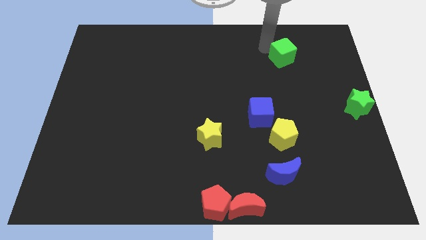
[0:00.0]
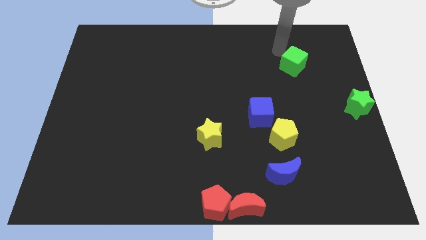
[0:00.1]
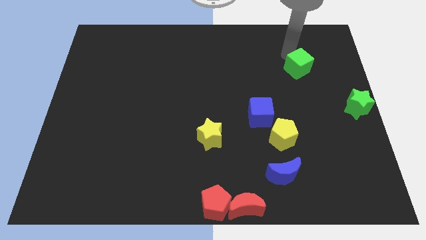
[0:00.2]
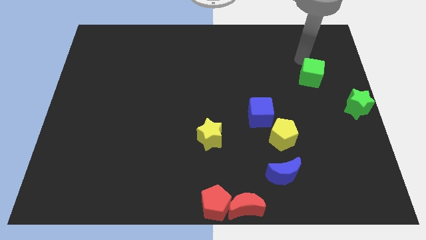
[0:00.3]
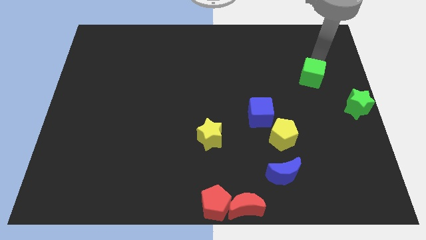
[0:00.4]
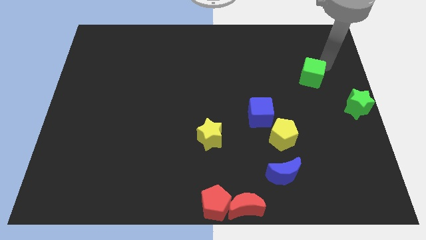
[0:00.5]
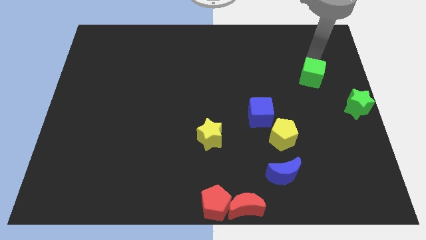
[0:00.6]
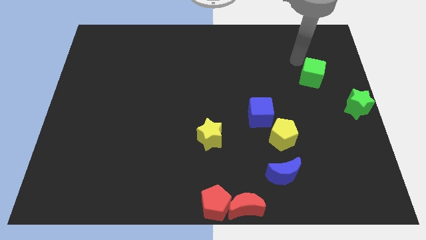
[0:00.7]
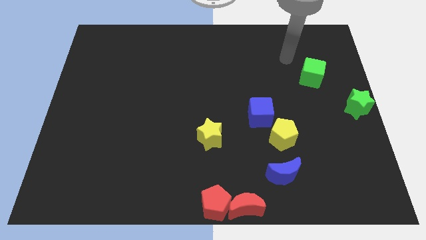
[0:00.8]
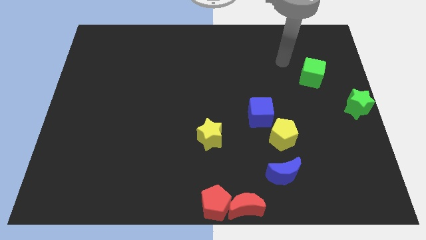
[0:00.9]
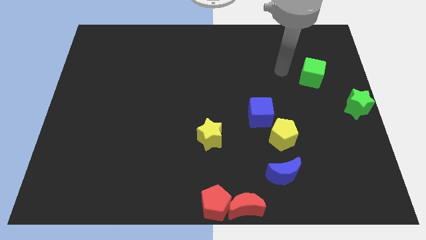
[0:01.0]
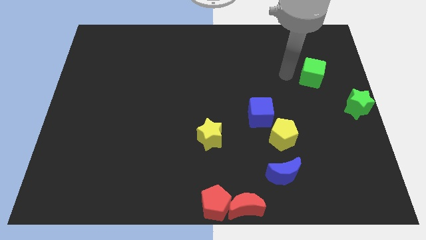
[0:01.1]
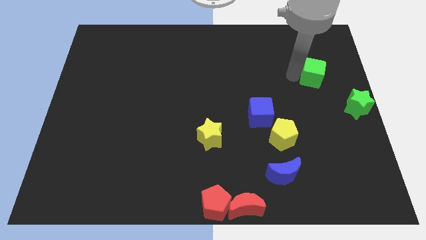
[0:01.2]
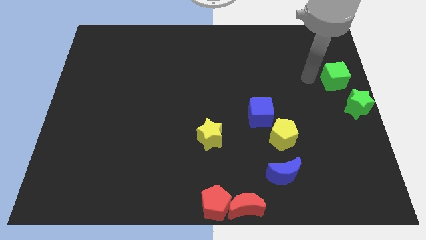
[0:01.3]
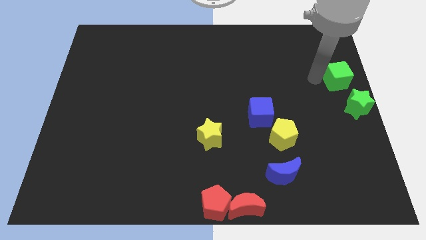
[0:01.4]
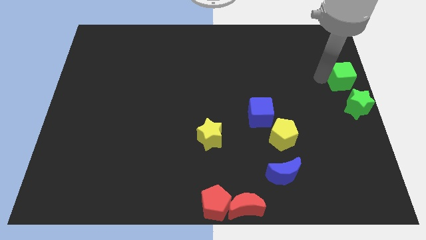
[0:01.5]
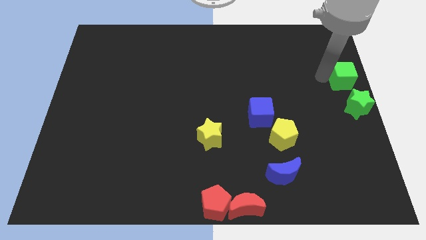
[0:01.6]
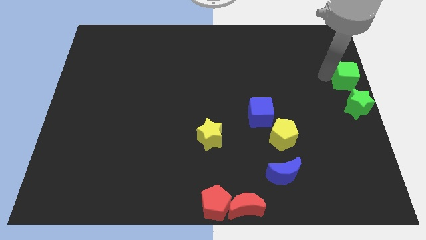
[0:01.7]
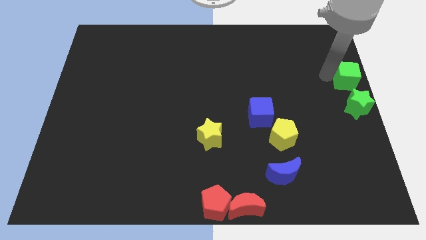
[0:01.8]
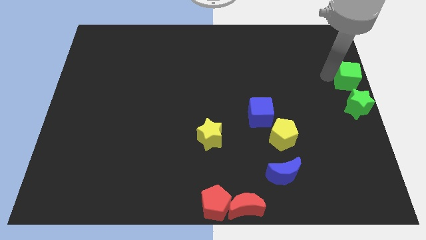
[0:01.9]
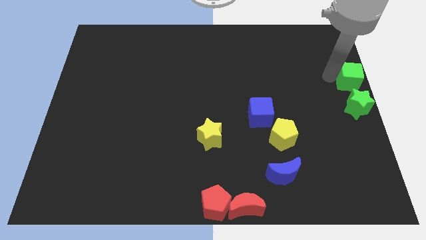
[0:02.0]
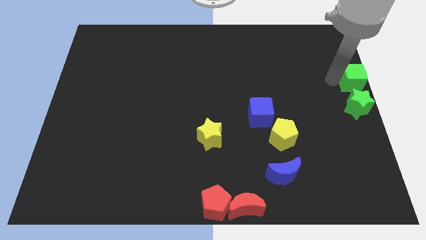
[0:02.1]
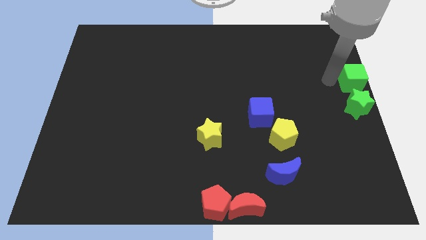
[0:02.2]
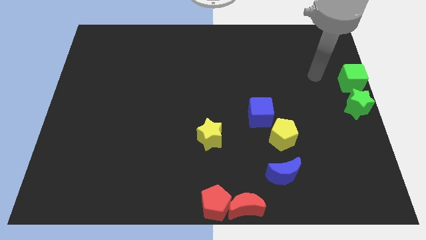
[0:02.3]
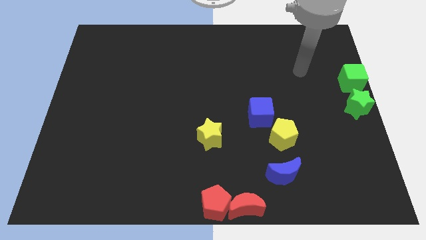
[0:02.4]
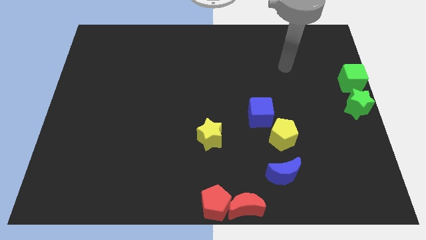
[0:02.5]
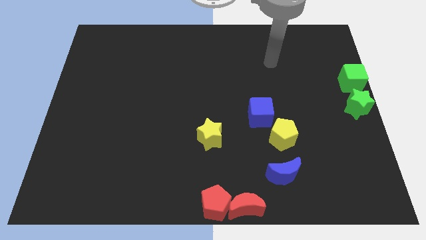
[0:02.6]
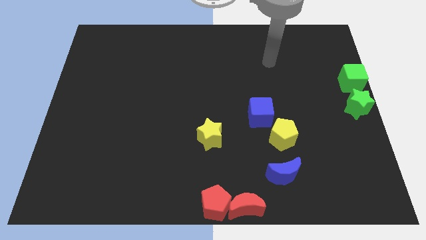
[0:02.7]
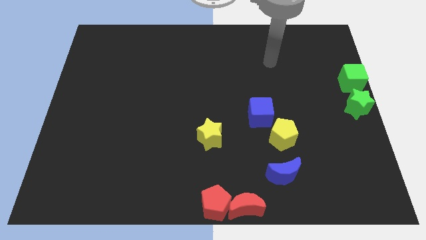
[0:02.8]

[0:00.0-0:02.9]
place the green cube above the green star

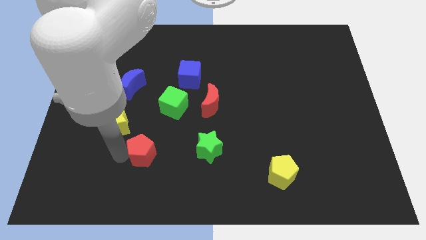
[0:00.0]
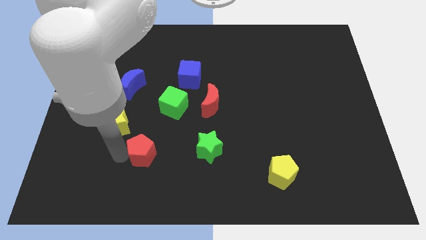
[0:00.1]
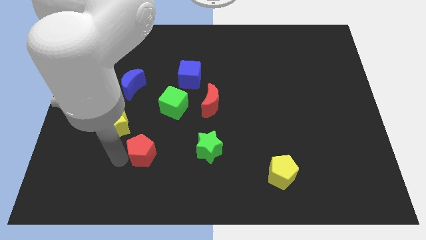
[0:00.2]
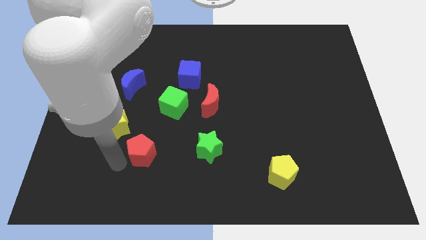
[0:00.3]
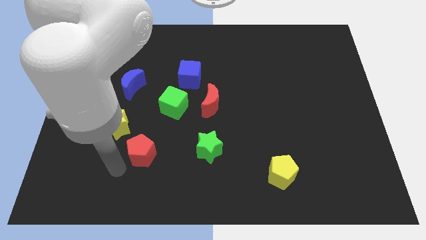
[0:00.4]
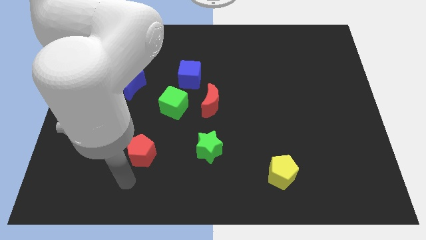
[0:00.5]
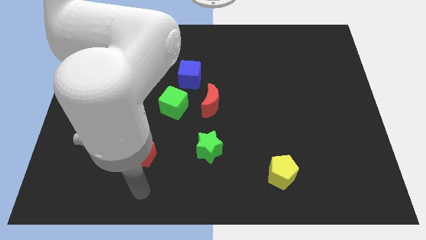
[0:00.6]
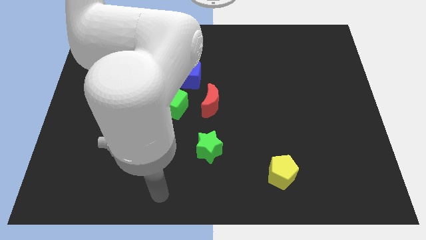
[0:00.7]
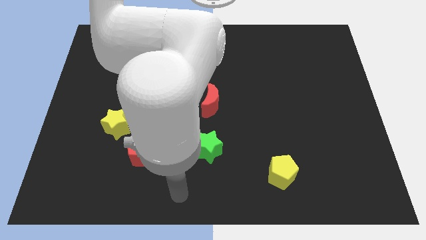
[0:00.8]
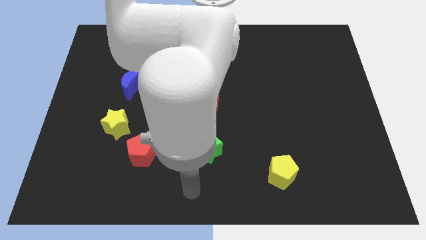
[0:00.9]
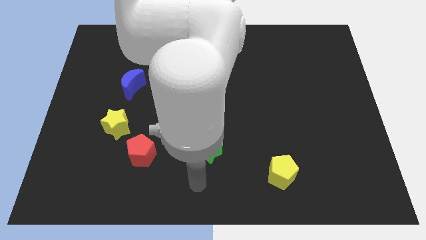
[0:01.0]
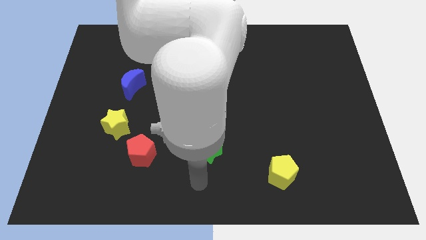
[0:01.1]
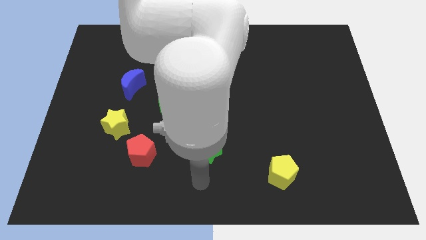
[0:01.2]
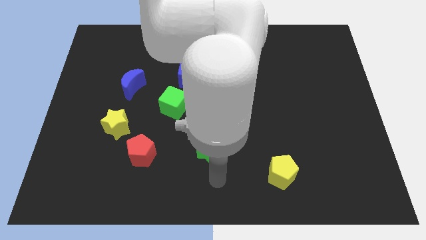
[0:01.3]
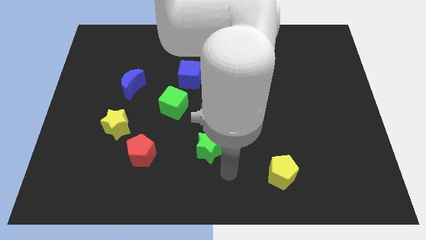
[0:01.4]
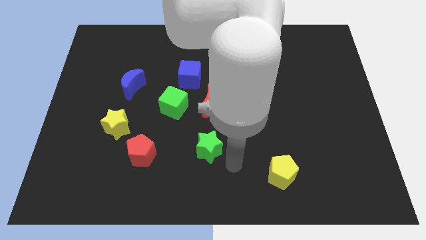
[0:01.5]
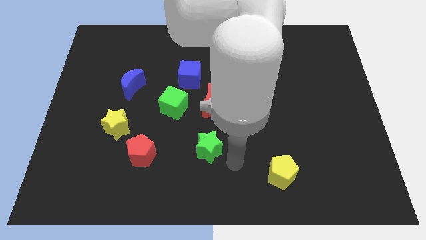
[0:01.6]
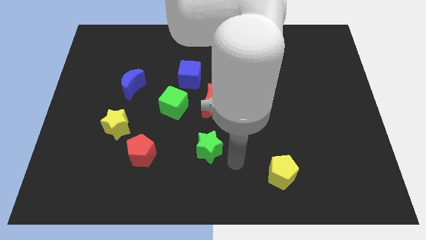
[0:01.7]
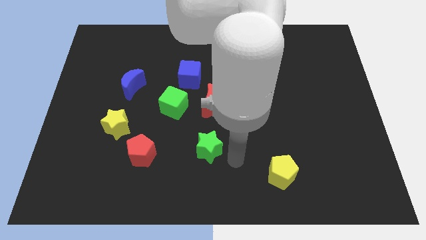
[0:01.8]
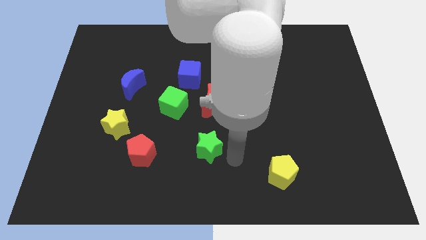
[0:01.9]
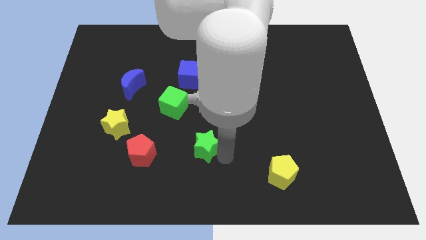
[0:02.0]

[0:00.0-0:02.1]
move your arm toward the green star

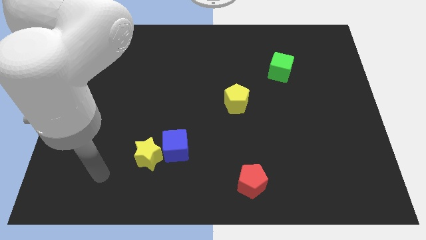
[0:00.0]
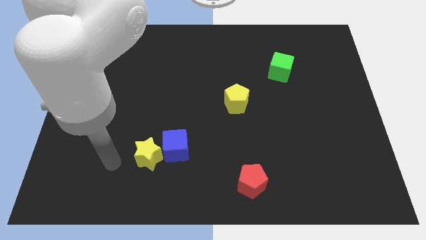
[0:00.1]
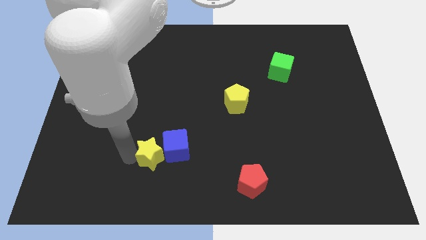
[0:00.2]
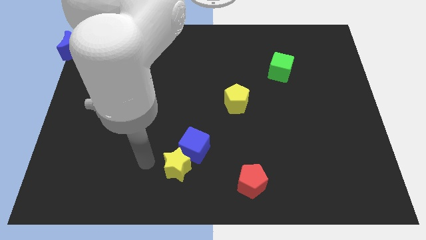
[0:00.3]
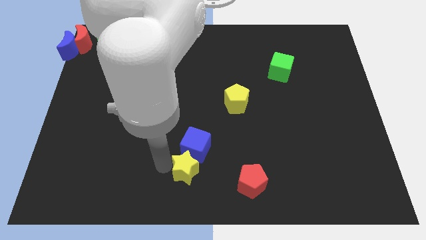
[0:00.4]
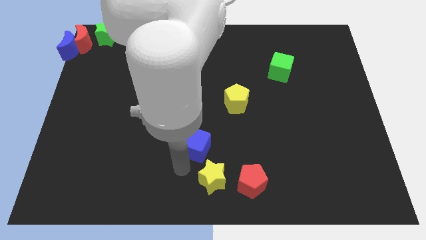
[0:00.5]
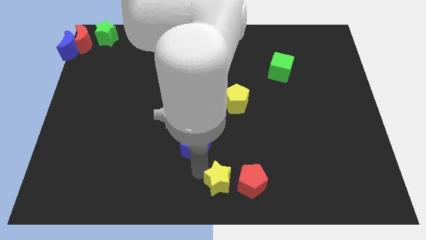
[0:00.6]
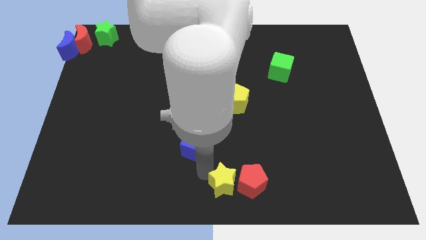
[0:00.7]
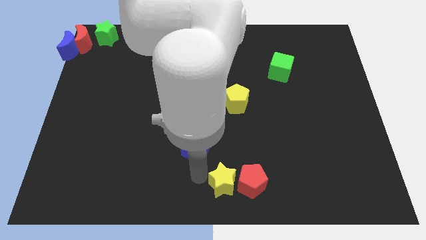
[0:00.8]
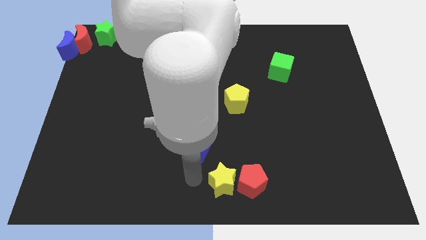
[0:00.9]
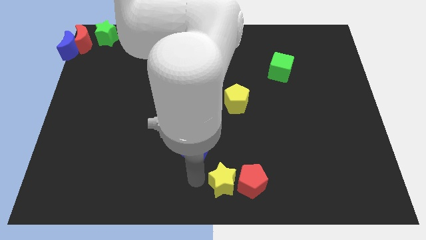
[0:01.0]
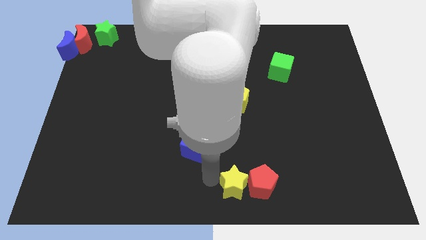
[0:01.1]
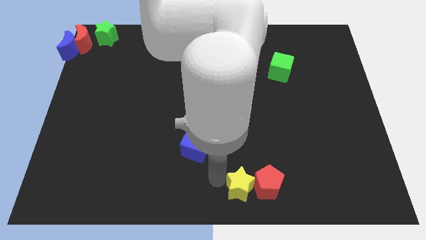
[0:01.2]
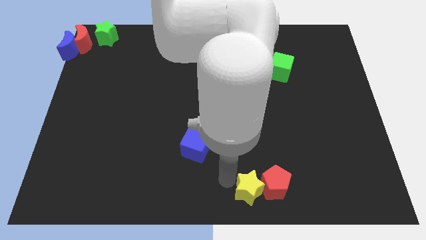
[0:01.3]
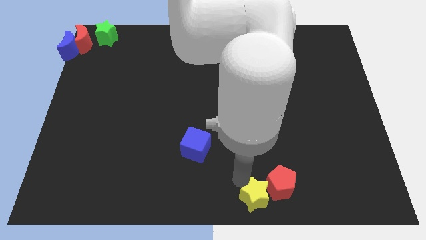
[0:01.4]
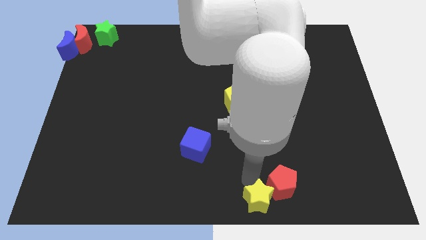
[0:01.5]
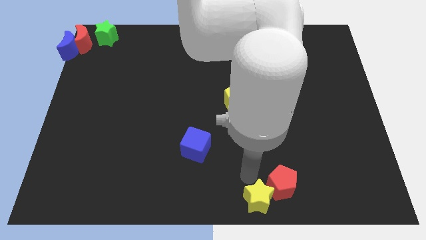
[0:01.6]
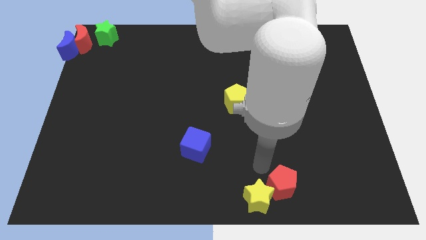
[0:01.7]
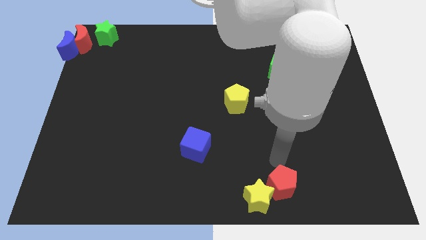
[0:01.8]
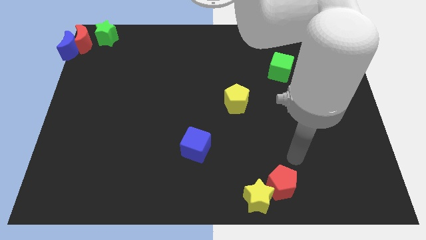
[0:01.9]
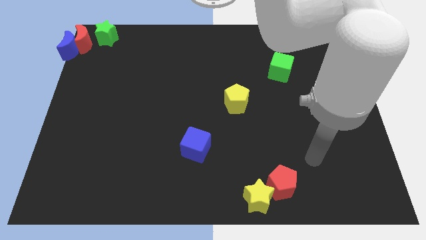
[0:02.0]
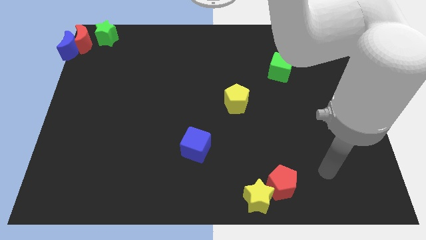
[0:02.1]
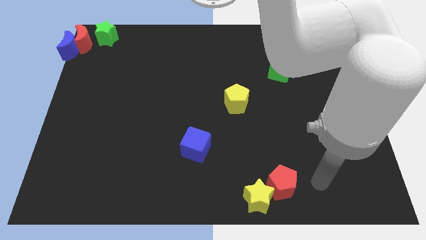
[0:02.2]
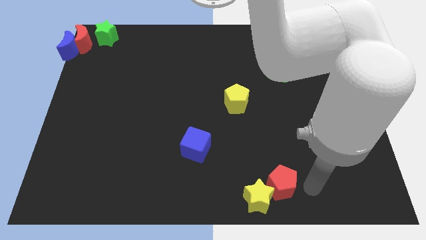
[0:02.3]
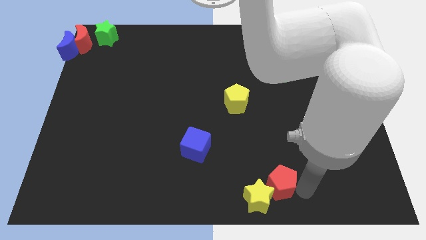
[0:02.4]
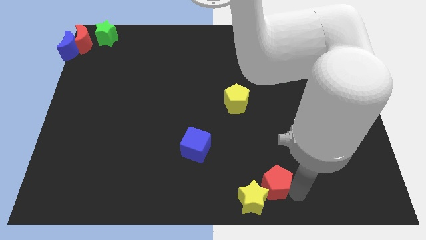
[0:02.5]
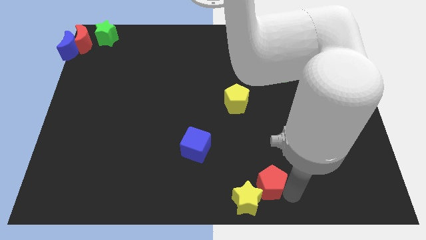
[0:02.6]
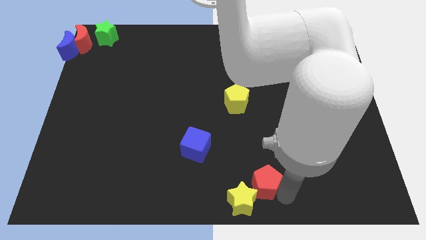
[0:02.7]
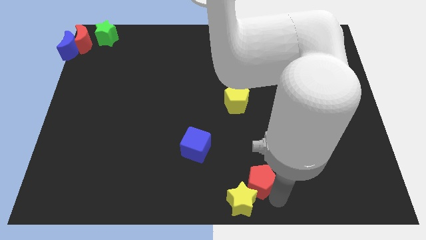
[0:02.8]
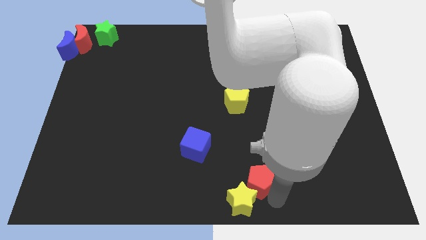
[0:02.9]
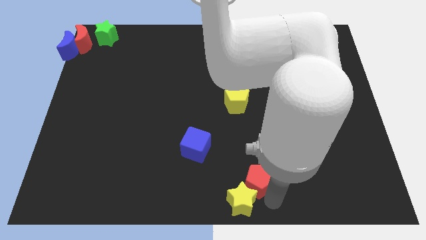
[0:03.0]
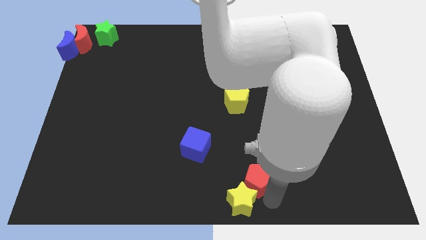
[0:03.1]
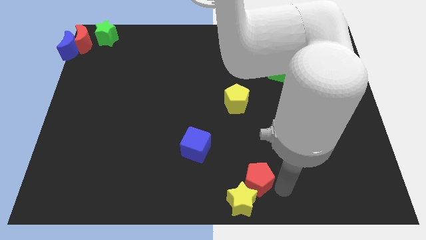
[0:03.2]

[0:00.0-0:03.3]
push the yellow star into the red pentagon

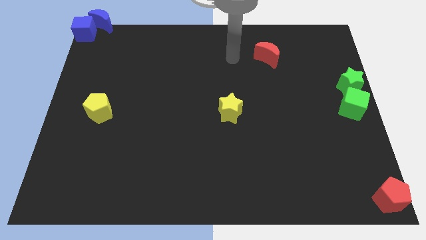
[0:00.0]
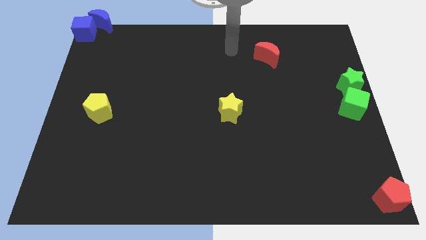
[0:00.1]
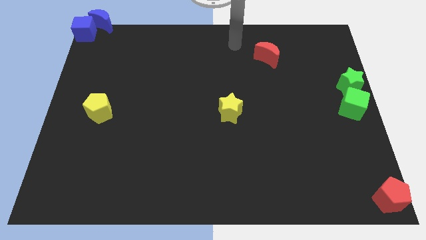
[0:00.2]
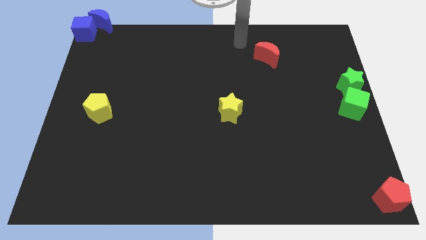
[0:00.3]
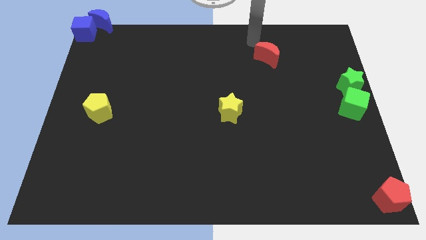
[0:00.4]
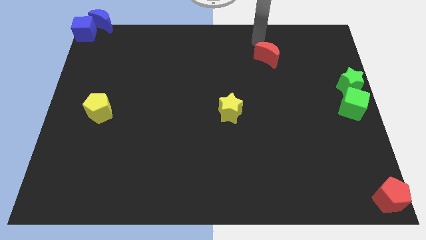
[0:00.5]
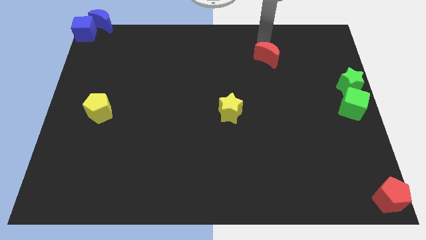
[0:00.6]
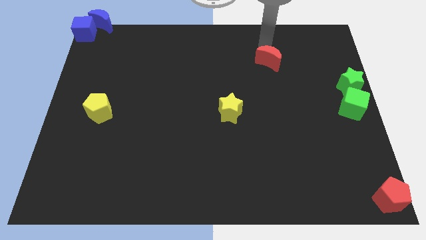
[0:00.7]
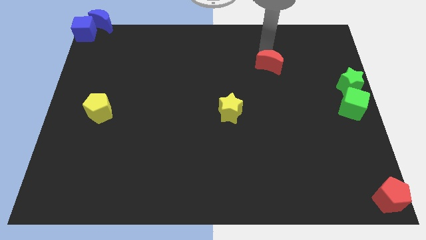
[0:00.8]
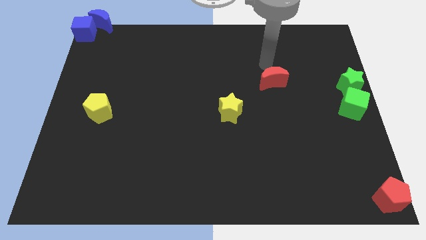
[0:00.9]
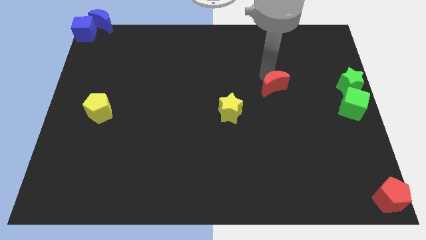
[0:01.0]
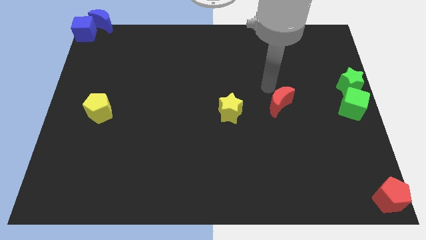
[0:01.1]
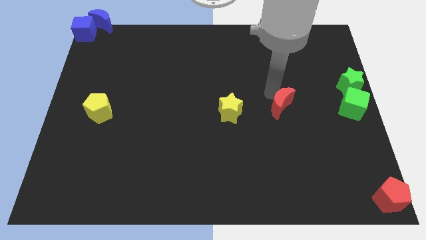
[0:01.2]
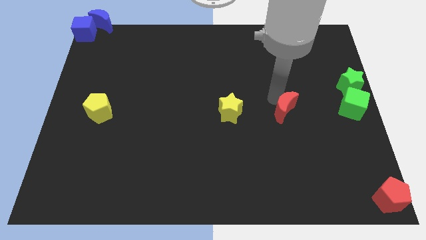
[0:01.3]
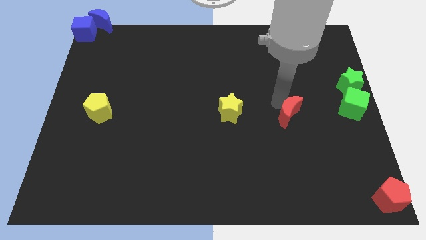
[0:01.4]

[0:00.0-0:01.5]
push the red crescentto the right of the yellow star
